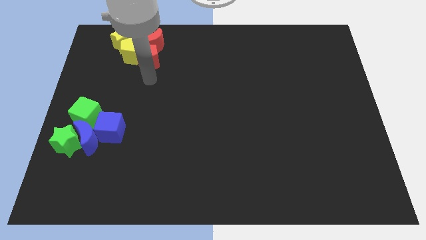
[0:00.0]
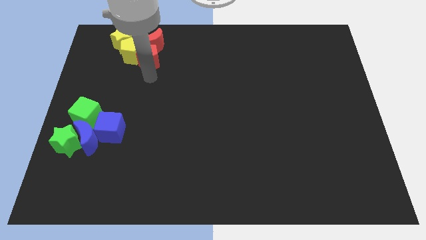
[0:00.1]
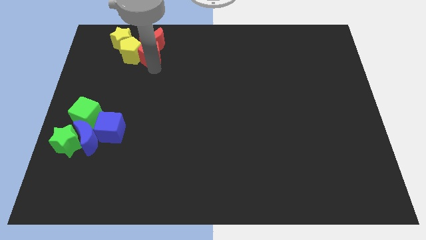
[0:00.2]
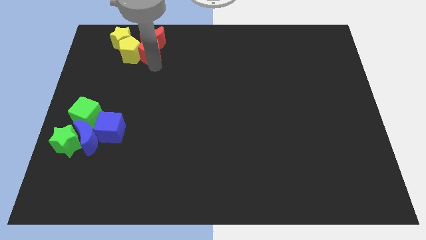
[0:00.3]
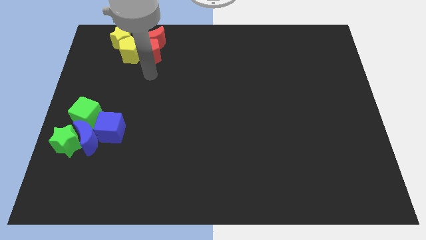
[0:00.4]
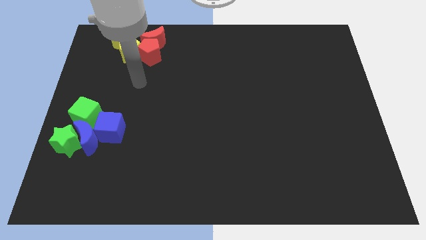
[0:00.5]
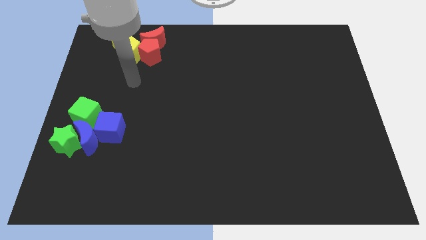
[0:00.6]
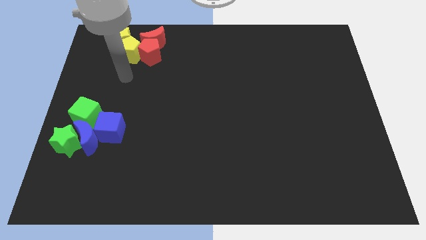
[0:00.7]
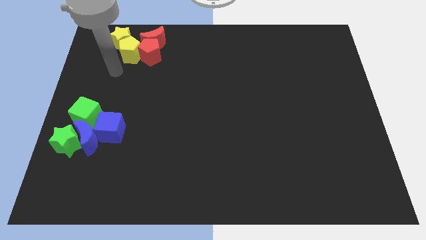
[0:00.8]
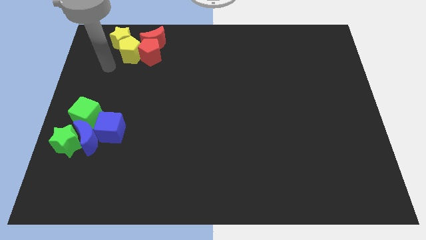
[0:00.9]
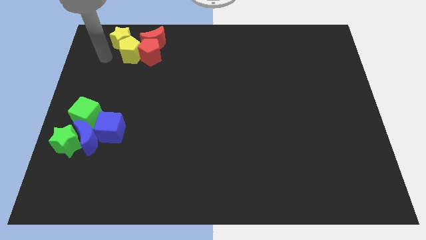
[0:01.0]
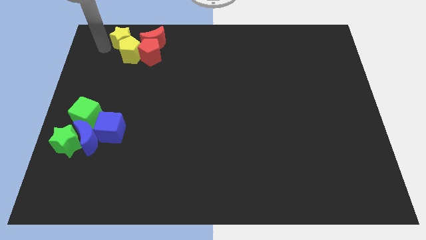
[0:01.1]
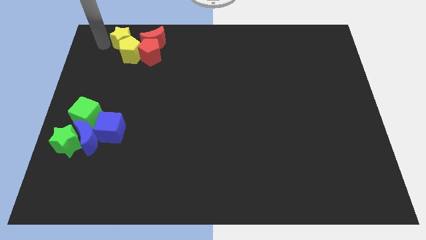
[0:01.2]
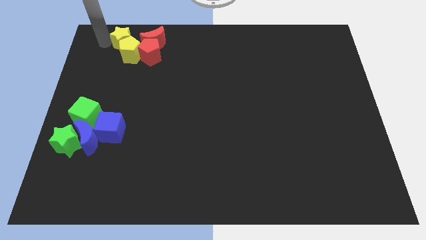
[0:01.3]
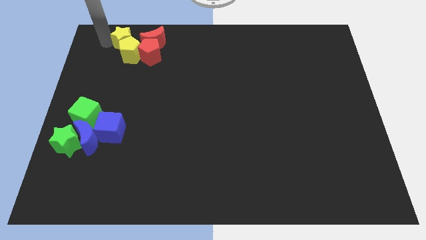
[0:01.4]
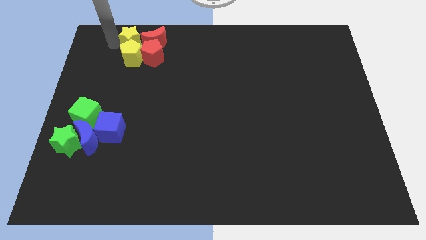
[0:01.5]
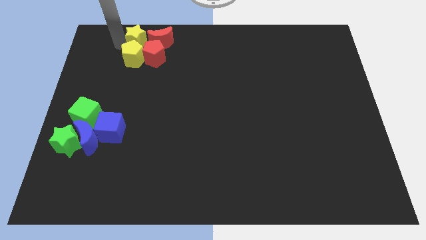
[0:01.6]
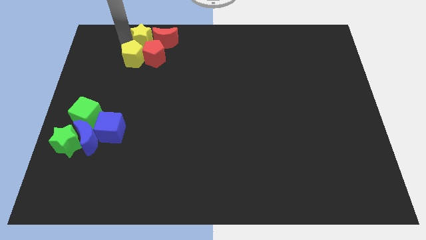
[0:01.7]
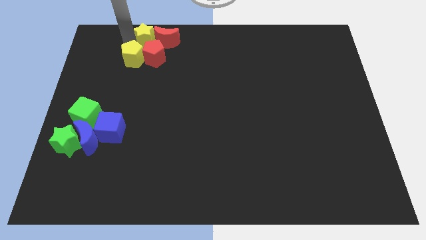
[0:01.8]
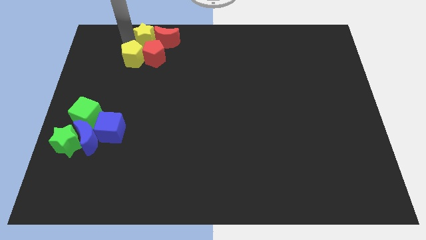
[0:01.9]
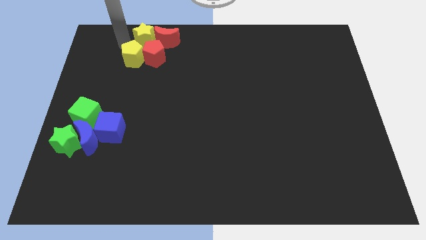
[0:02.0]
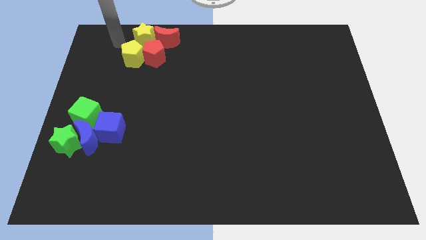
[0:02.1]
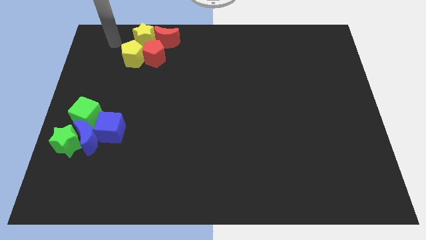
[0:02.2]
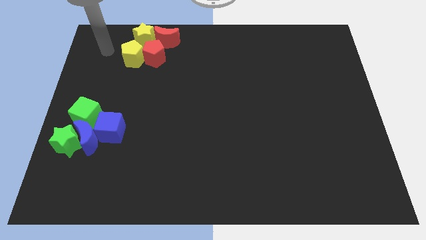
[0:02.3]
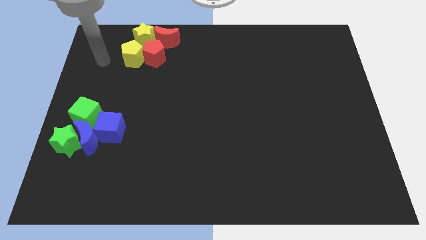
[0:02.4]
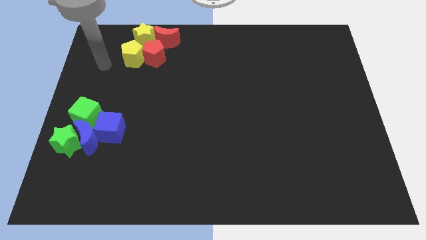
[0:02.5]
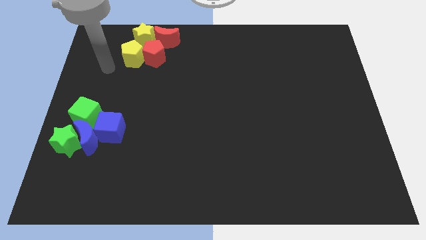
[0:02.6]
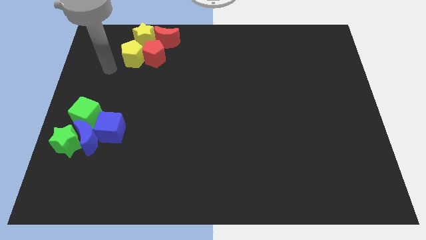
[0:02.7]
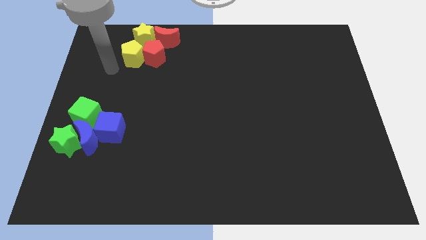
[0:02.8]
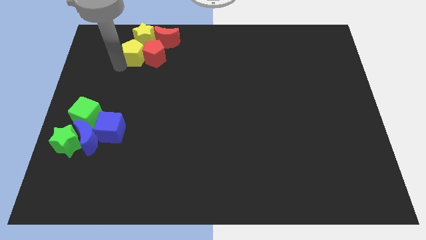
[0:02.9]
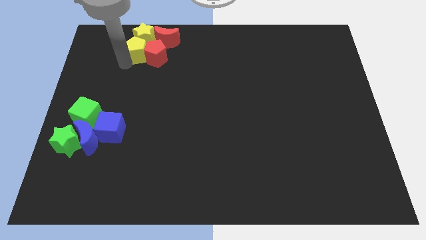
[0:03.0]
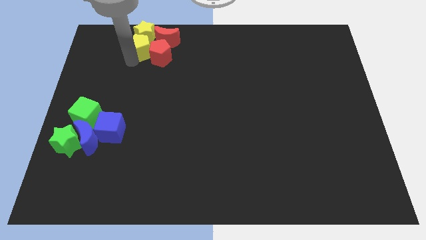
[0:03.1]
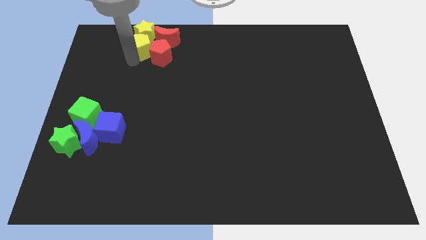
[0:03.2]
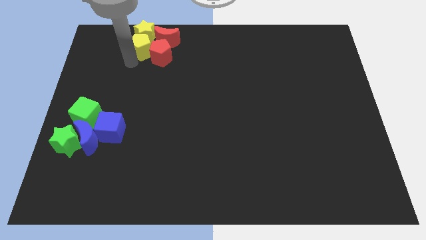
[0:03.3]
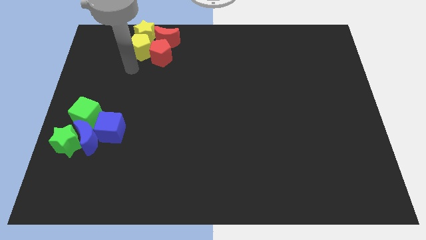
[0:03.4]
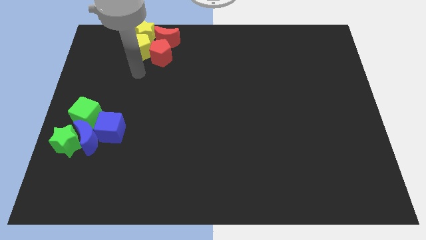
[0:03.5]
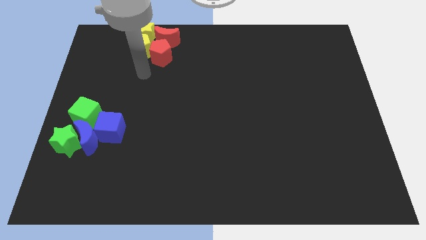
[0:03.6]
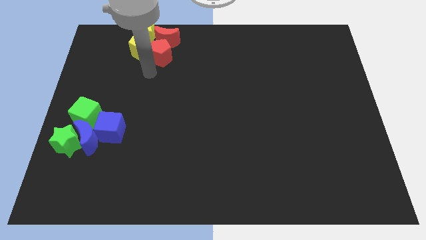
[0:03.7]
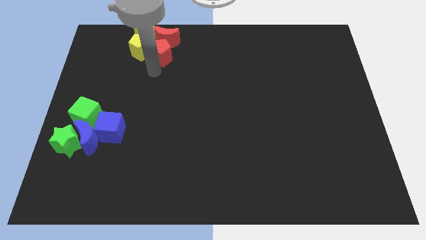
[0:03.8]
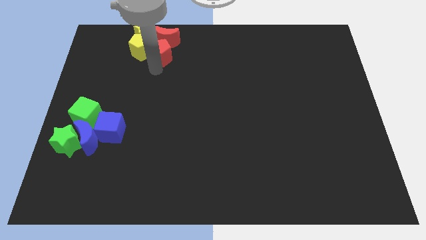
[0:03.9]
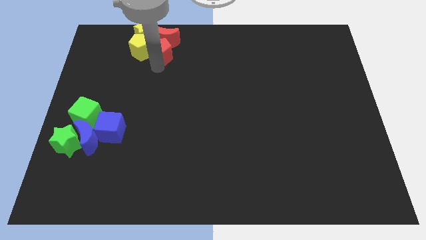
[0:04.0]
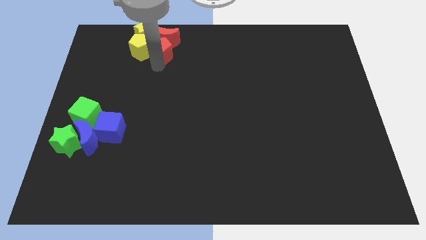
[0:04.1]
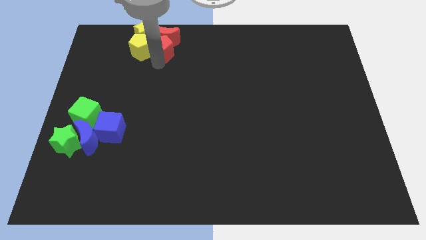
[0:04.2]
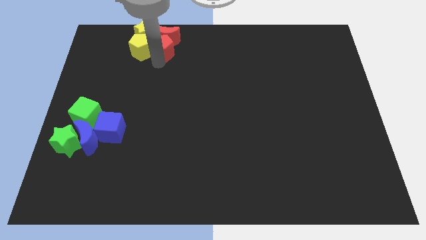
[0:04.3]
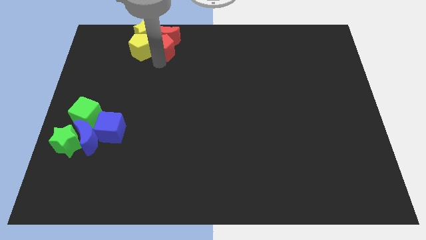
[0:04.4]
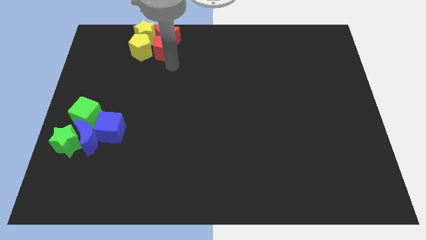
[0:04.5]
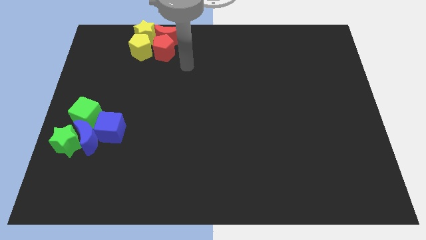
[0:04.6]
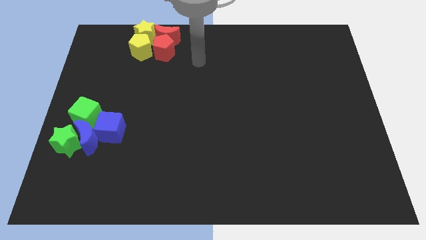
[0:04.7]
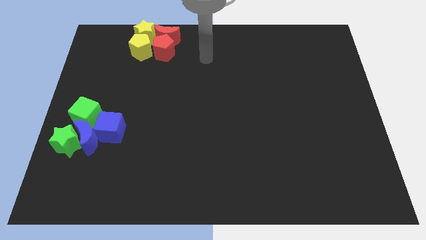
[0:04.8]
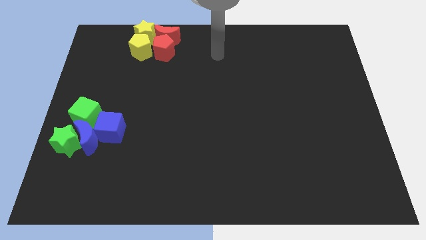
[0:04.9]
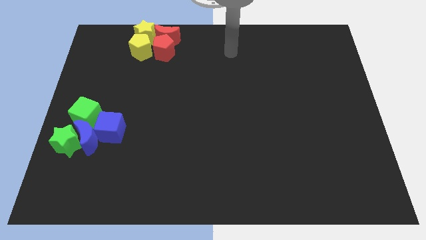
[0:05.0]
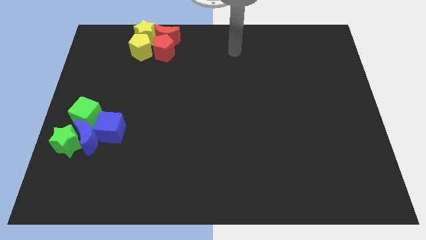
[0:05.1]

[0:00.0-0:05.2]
adjust the yellow blocks and red blocks

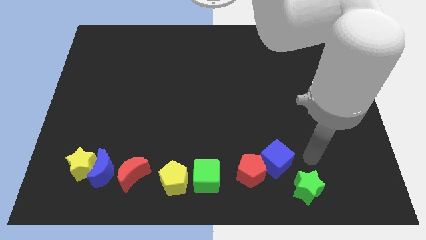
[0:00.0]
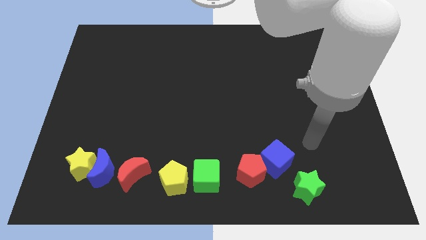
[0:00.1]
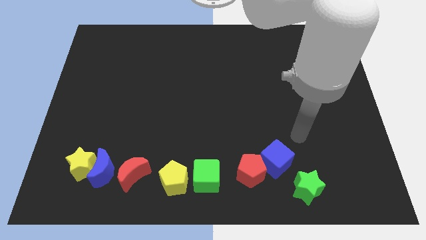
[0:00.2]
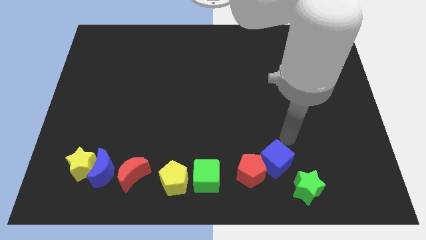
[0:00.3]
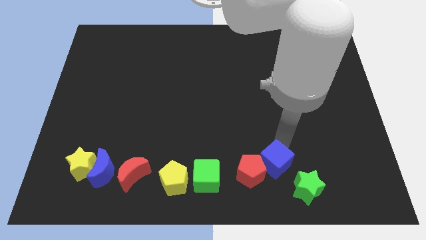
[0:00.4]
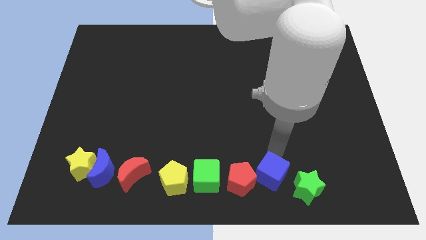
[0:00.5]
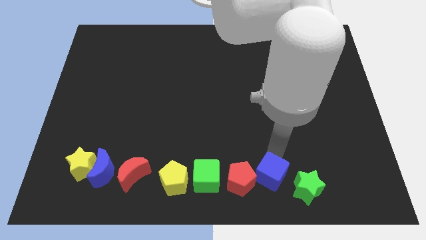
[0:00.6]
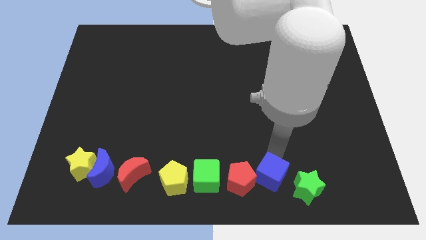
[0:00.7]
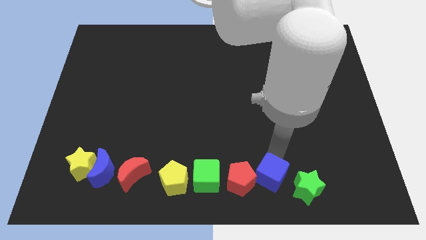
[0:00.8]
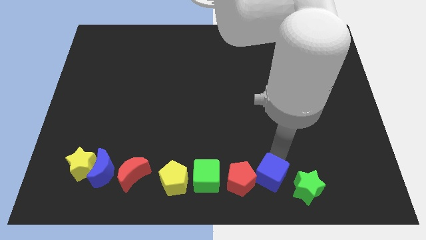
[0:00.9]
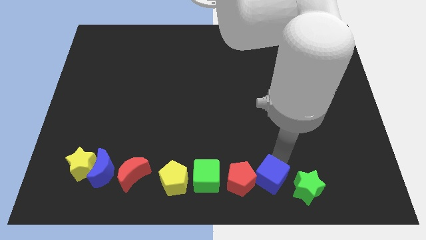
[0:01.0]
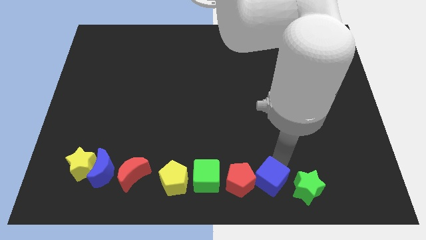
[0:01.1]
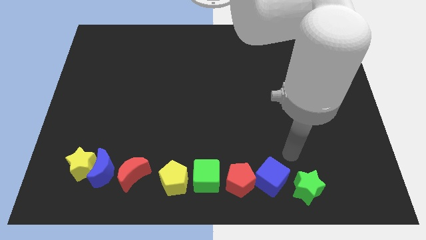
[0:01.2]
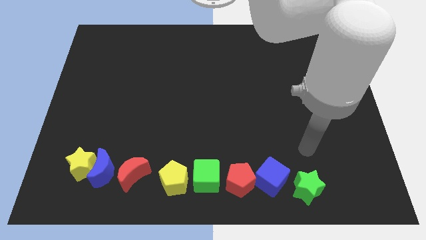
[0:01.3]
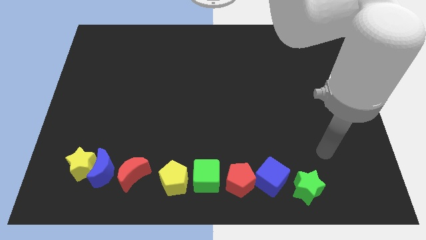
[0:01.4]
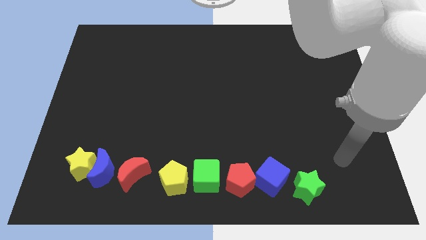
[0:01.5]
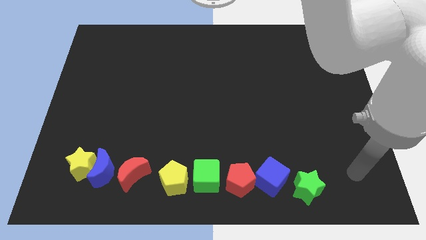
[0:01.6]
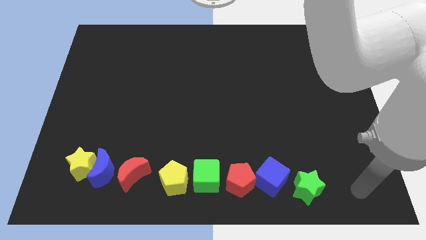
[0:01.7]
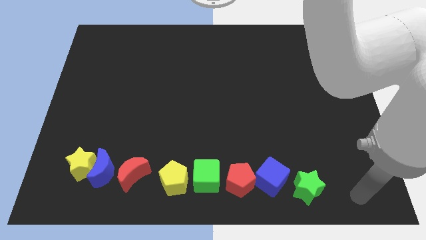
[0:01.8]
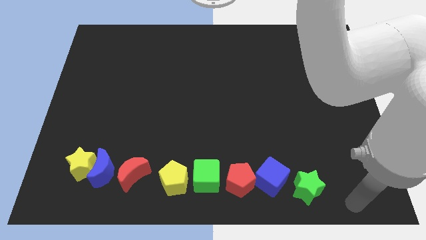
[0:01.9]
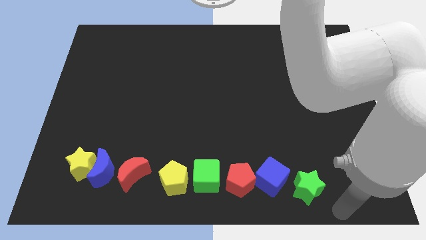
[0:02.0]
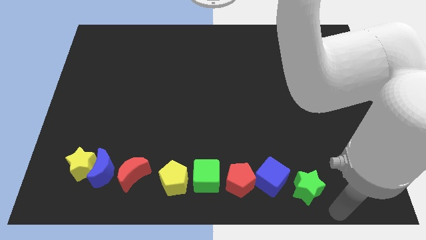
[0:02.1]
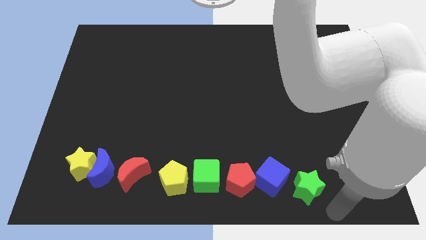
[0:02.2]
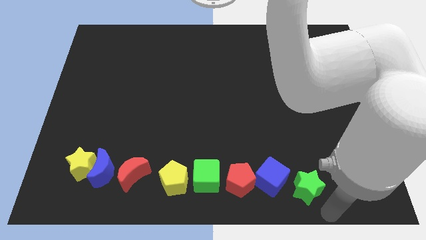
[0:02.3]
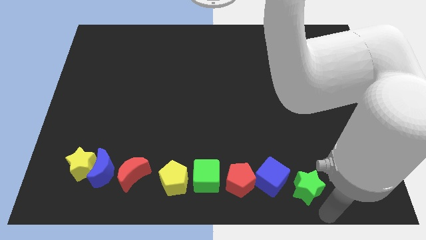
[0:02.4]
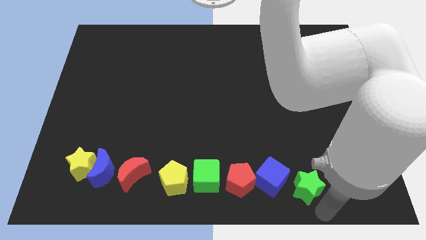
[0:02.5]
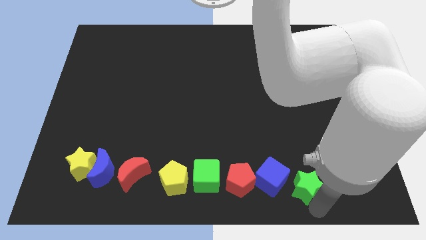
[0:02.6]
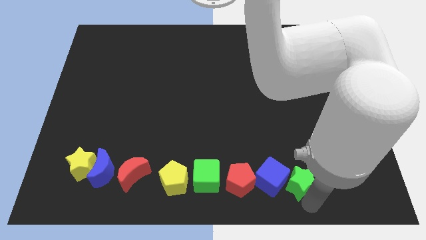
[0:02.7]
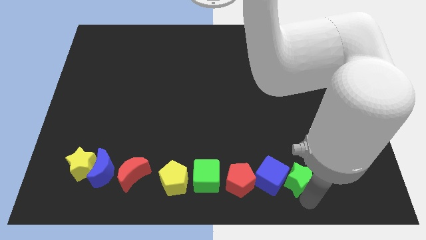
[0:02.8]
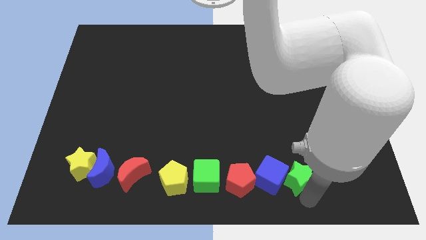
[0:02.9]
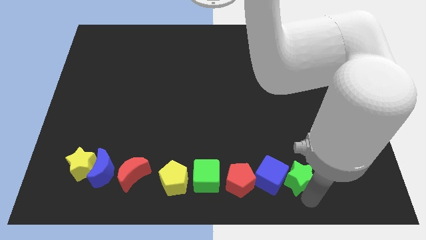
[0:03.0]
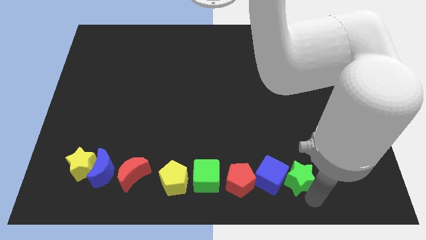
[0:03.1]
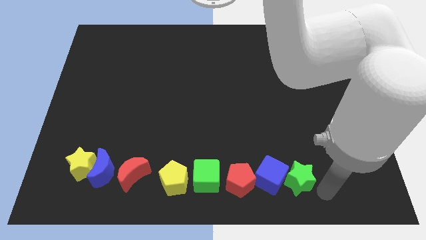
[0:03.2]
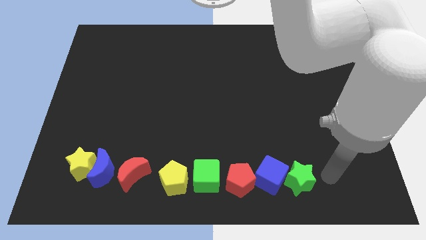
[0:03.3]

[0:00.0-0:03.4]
arrange all the blocks in a horizontal line

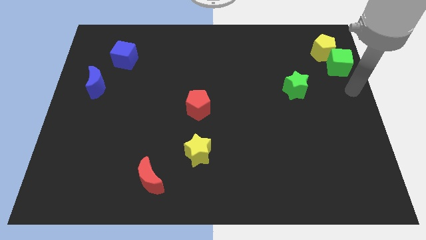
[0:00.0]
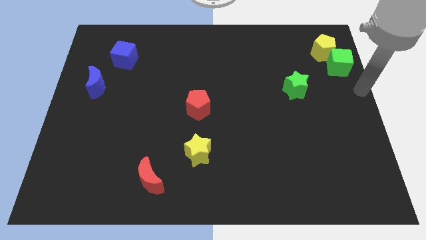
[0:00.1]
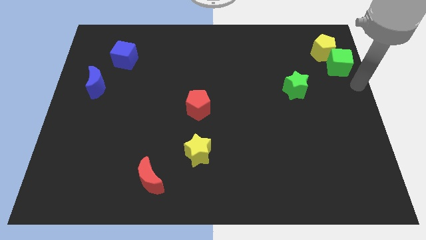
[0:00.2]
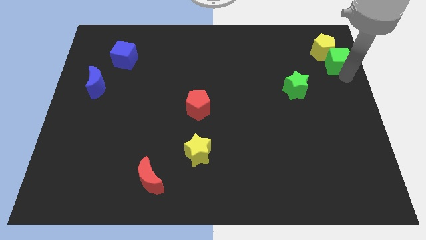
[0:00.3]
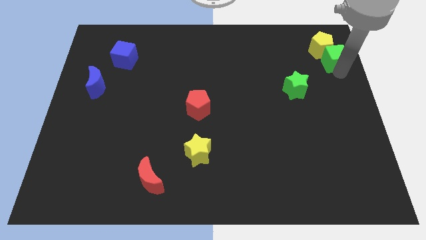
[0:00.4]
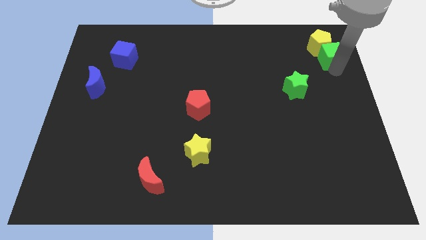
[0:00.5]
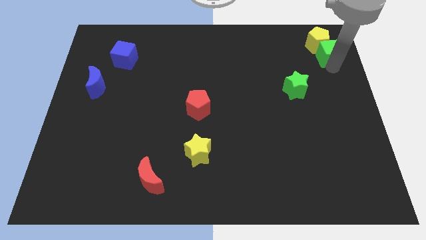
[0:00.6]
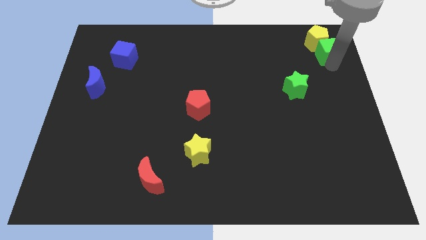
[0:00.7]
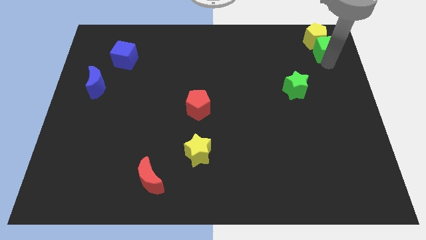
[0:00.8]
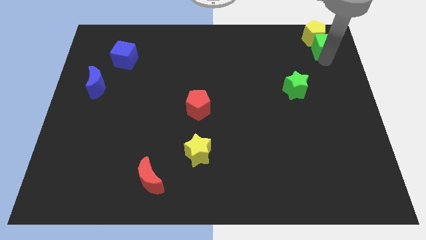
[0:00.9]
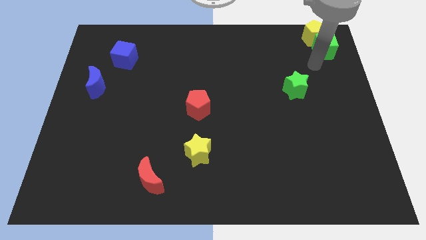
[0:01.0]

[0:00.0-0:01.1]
push the yellow pentagon to the top with the green cube
